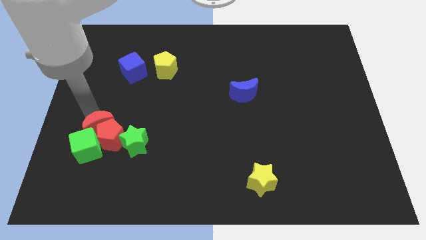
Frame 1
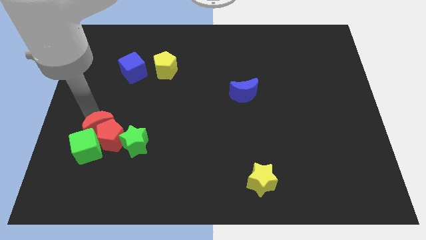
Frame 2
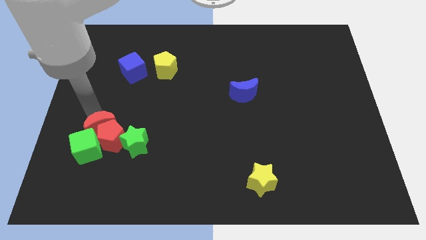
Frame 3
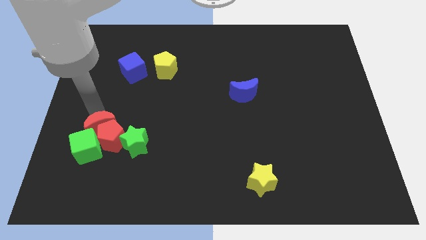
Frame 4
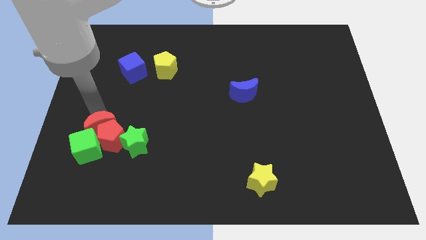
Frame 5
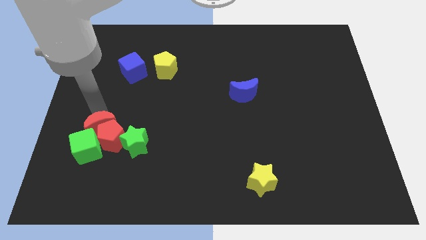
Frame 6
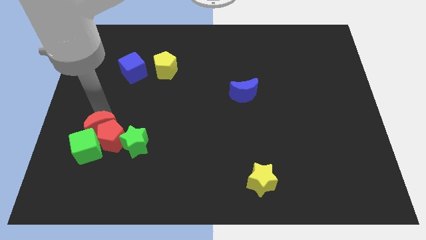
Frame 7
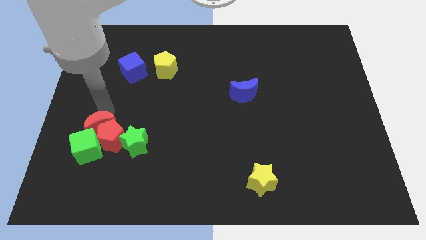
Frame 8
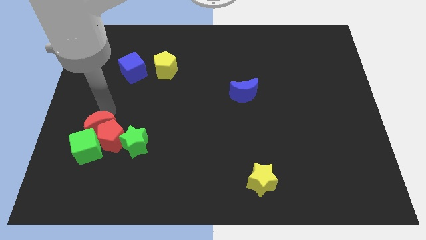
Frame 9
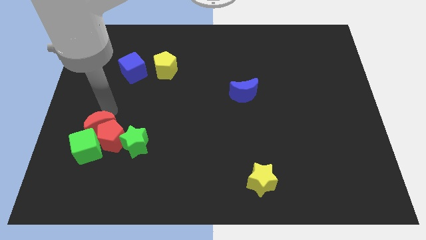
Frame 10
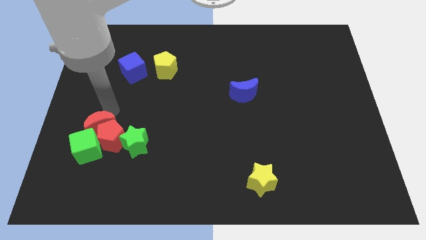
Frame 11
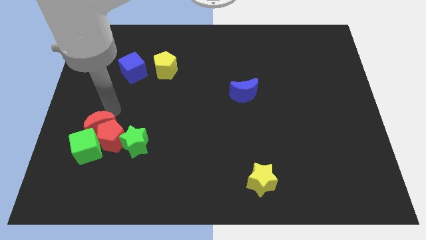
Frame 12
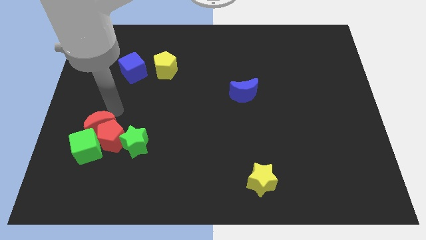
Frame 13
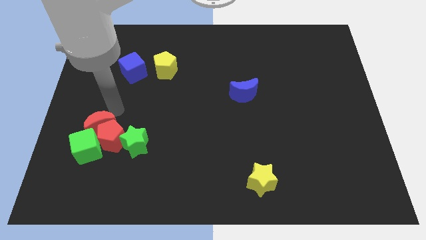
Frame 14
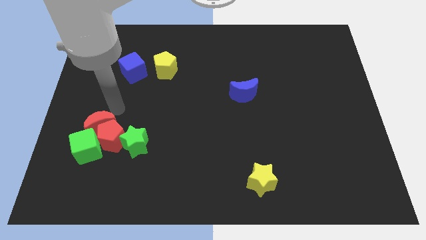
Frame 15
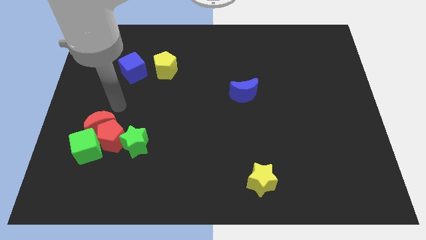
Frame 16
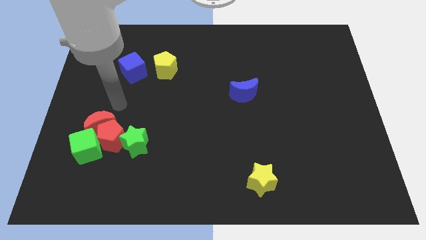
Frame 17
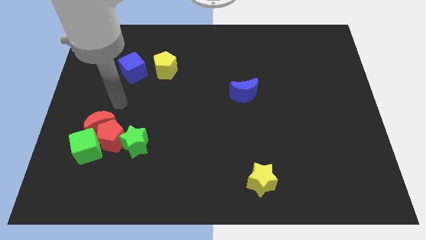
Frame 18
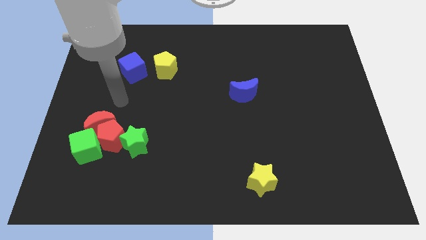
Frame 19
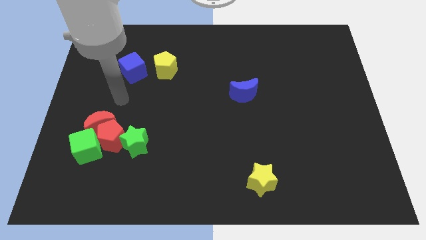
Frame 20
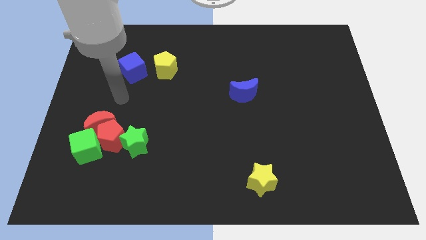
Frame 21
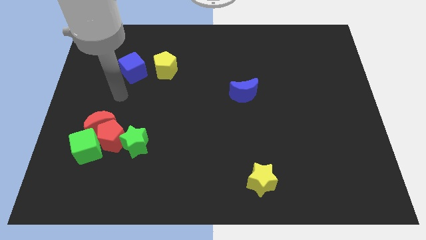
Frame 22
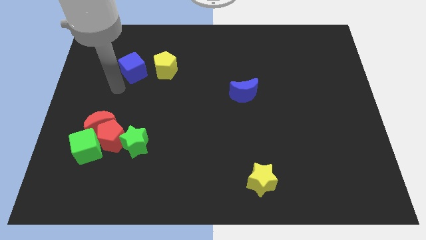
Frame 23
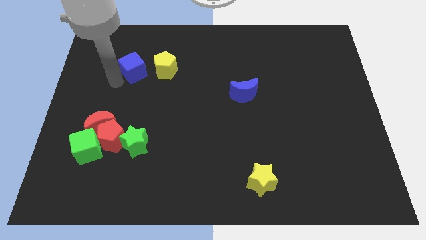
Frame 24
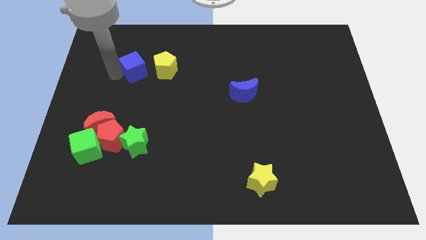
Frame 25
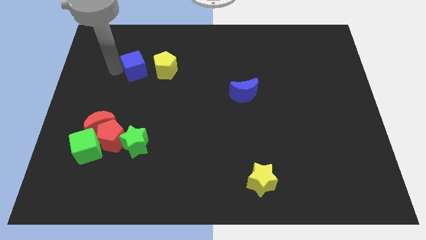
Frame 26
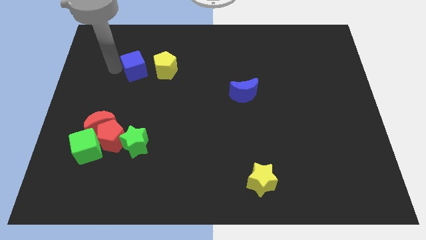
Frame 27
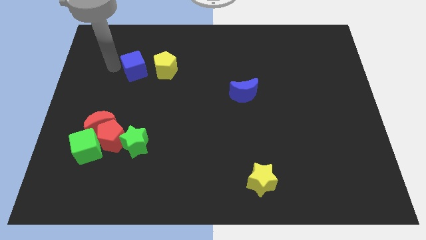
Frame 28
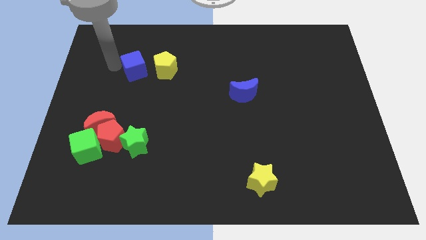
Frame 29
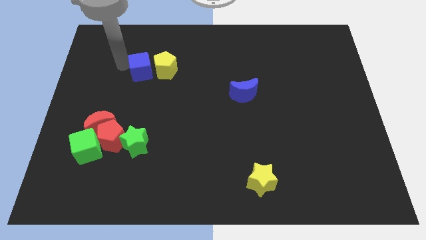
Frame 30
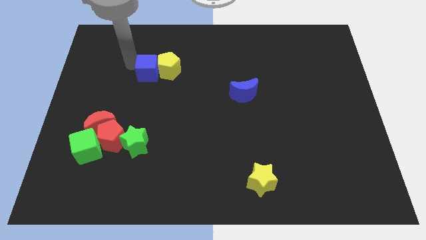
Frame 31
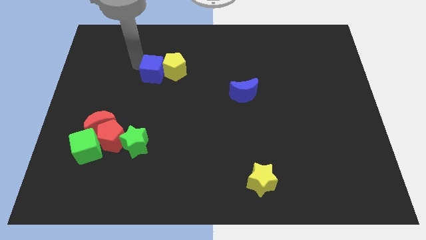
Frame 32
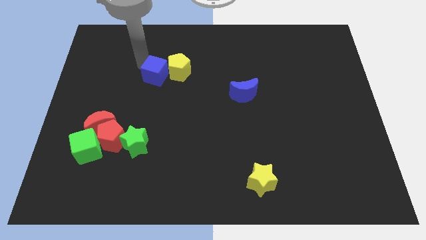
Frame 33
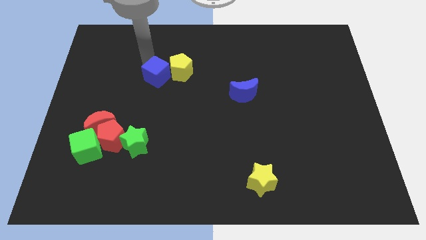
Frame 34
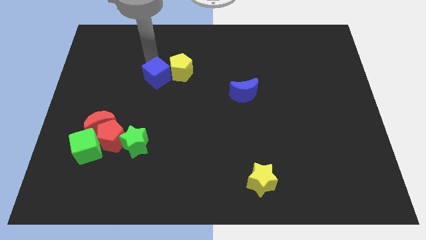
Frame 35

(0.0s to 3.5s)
move the blue cube into the yellow pentagon

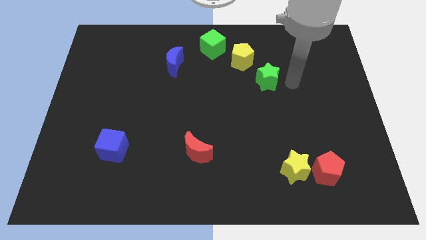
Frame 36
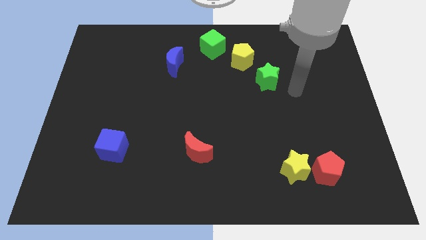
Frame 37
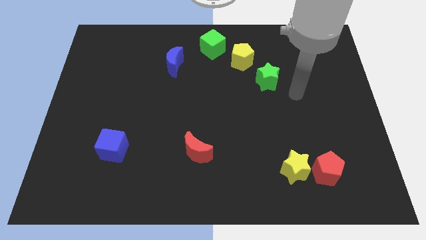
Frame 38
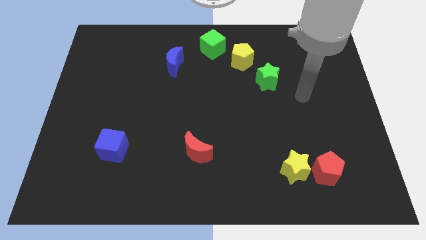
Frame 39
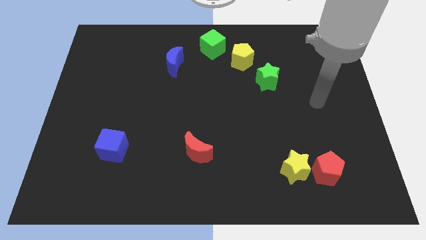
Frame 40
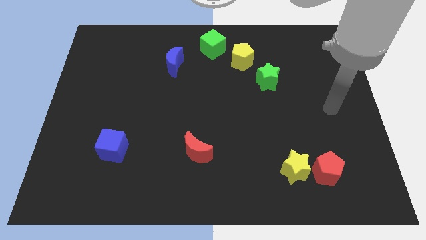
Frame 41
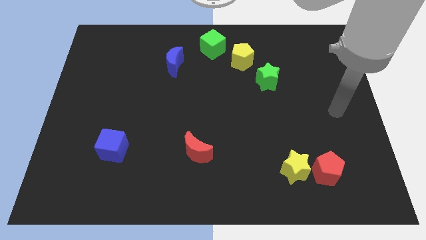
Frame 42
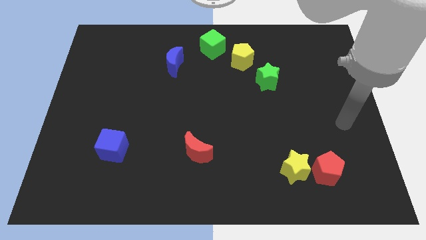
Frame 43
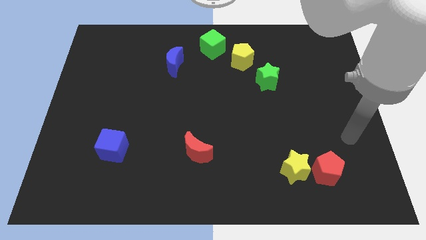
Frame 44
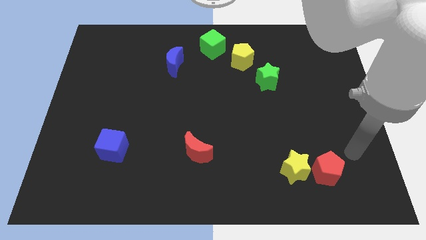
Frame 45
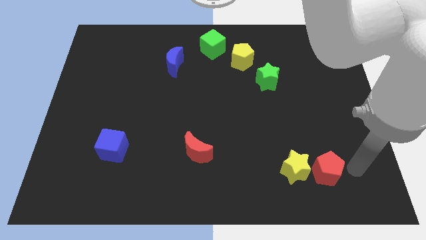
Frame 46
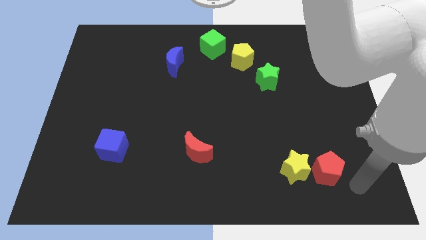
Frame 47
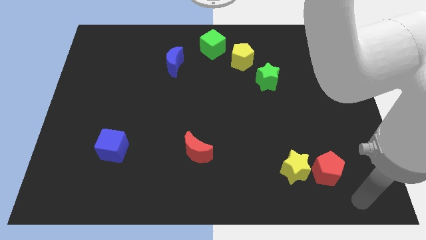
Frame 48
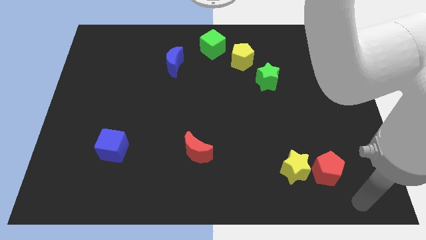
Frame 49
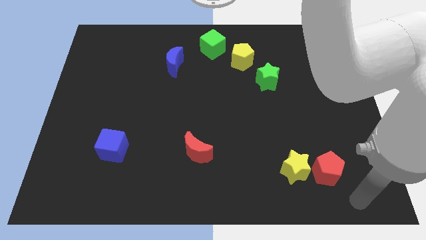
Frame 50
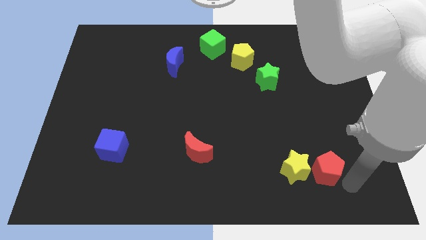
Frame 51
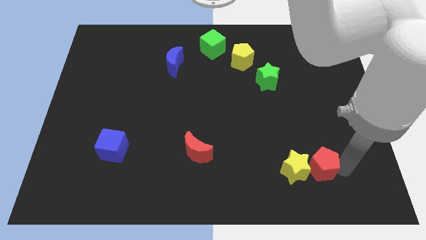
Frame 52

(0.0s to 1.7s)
tap the red pentagon

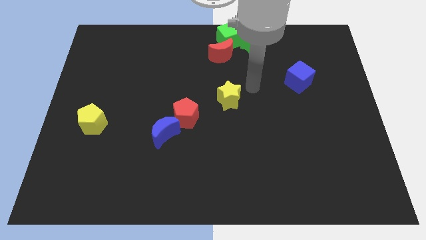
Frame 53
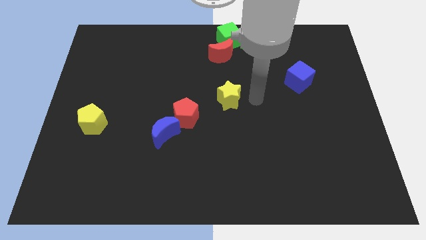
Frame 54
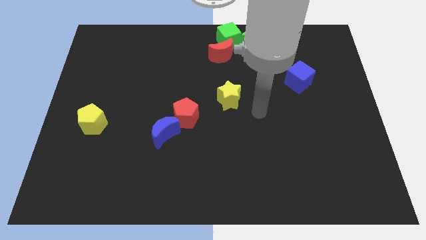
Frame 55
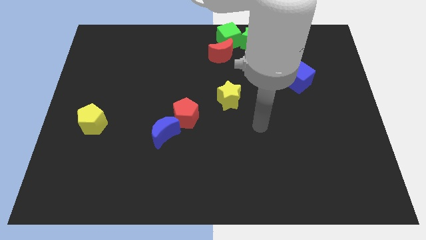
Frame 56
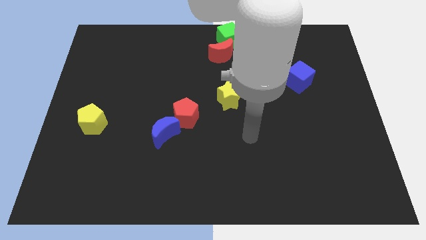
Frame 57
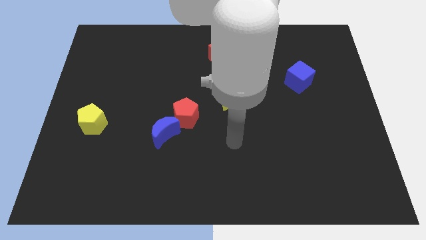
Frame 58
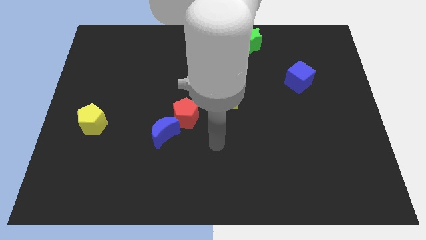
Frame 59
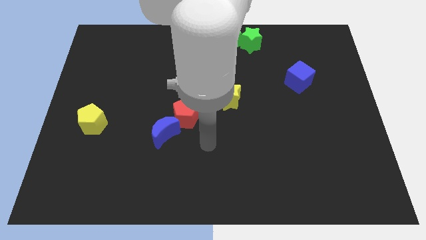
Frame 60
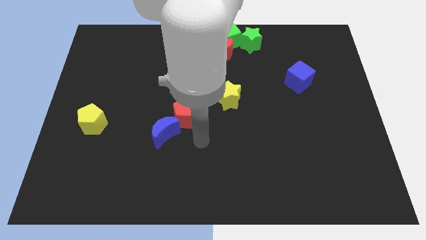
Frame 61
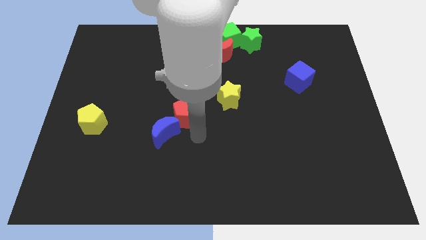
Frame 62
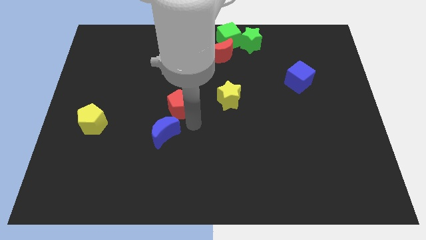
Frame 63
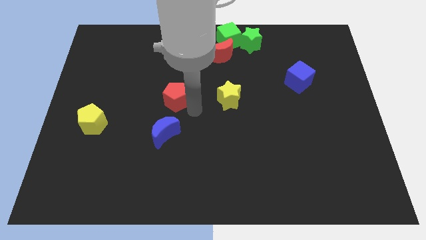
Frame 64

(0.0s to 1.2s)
tap the bottom right side of red pentagon

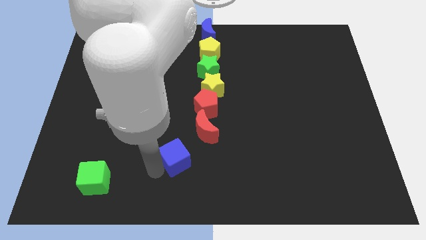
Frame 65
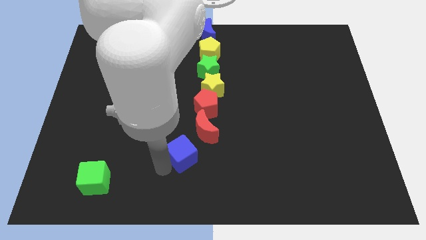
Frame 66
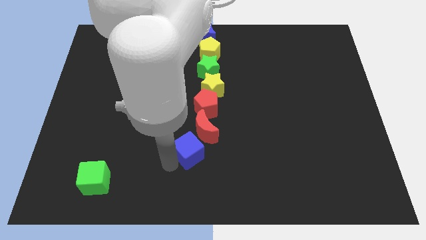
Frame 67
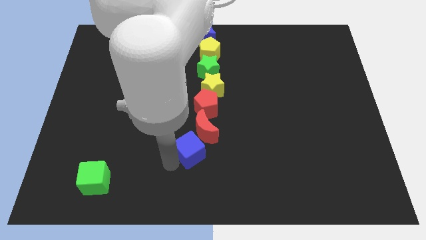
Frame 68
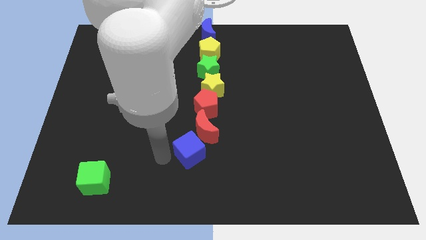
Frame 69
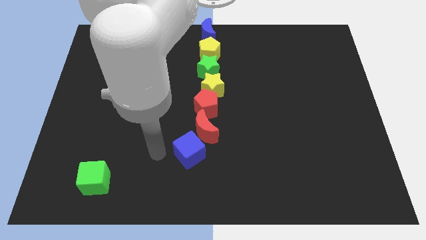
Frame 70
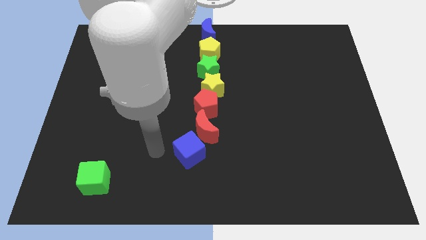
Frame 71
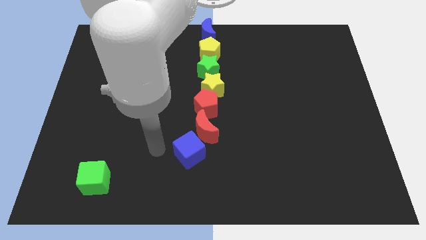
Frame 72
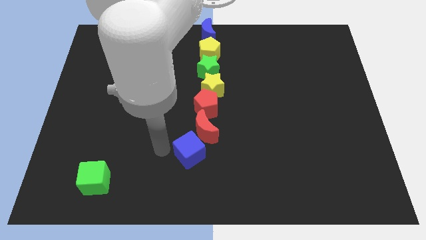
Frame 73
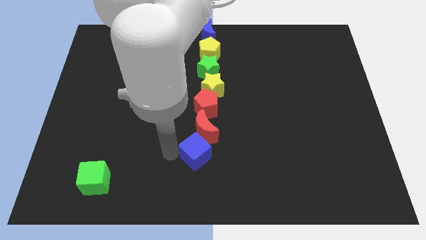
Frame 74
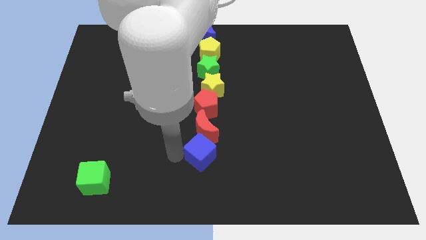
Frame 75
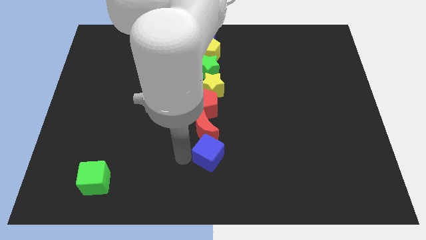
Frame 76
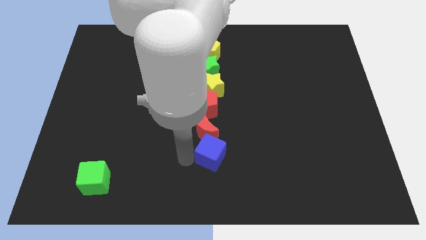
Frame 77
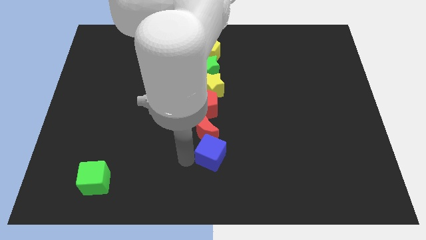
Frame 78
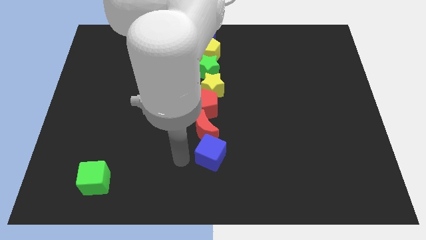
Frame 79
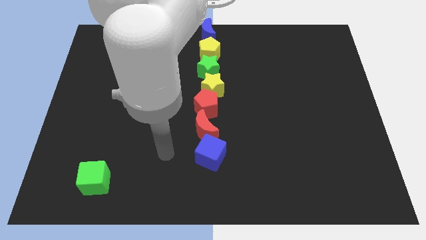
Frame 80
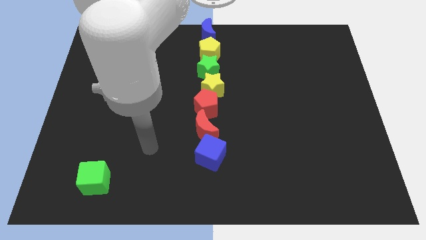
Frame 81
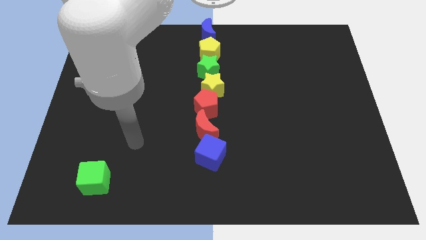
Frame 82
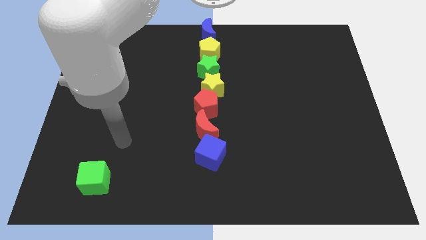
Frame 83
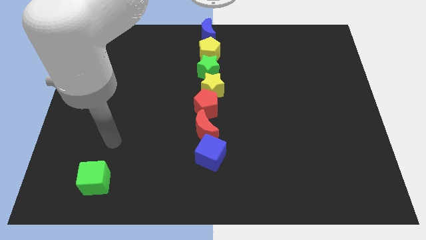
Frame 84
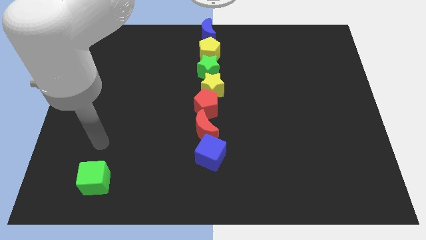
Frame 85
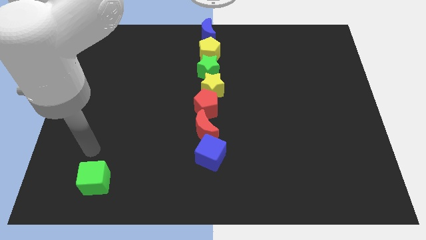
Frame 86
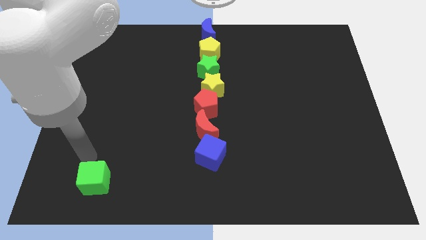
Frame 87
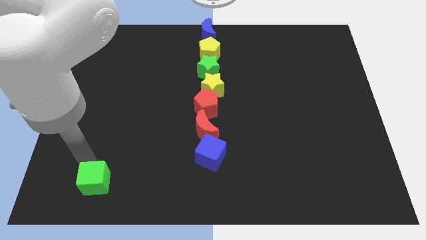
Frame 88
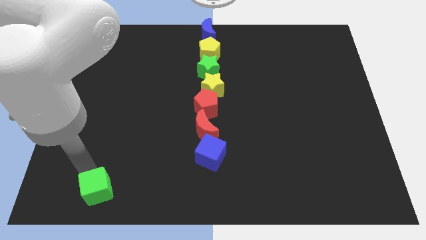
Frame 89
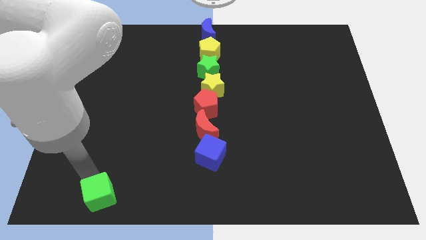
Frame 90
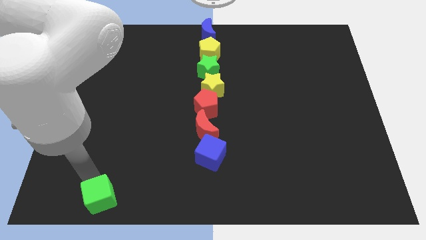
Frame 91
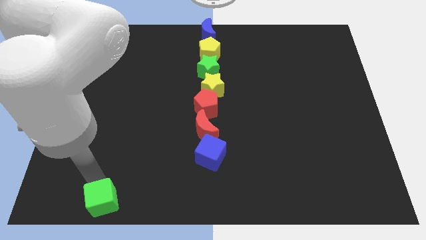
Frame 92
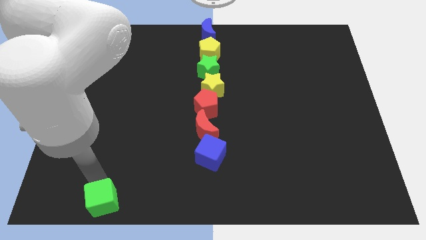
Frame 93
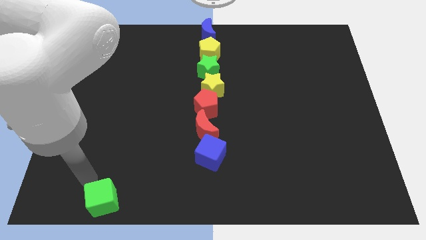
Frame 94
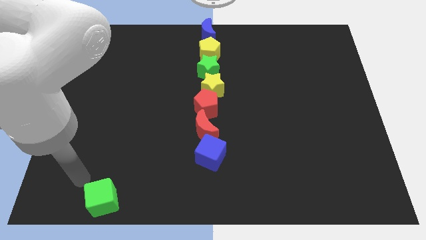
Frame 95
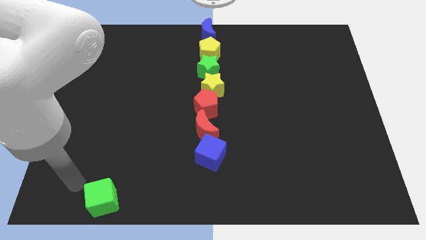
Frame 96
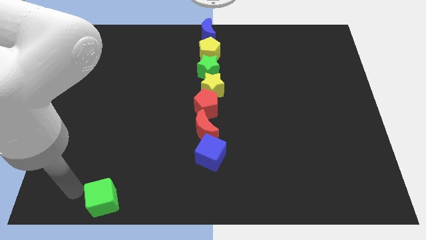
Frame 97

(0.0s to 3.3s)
move the blue cube to the bottom of the red moon
